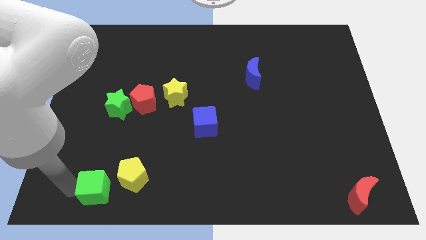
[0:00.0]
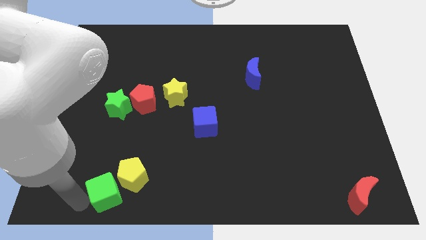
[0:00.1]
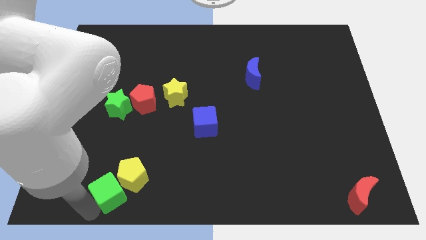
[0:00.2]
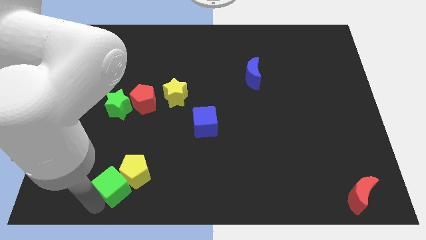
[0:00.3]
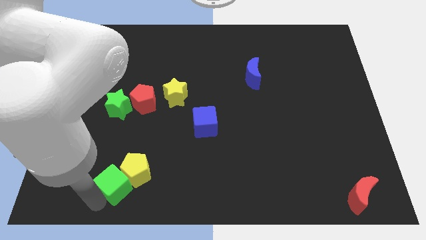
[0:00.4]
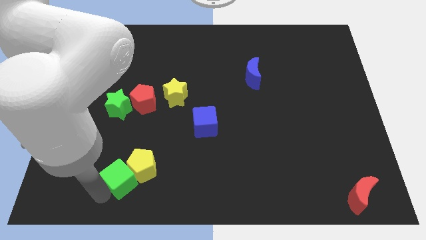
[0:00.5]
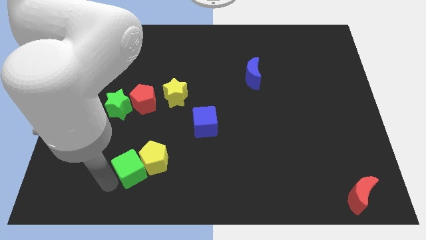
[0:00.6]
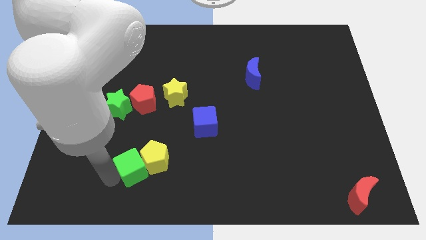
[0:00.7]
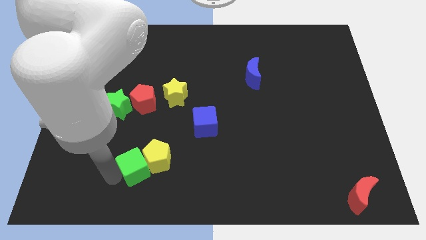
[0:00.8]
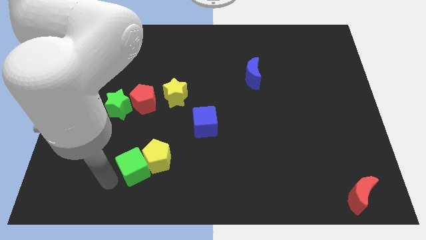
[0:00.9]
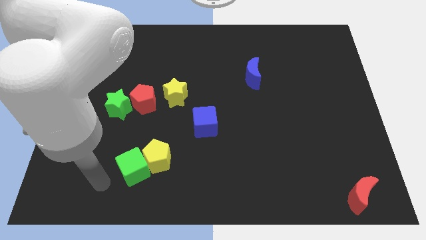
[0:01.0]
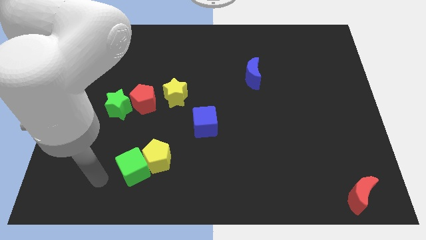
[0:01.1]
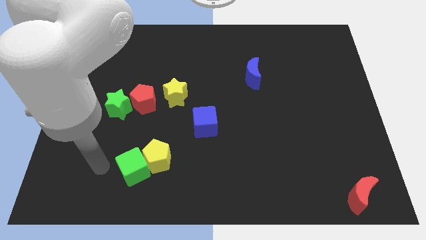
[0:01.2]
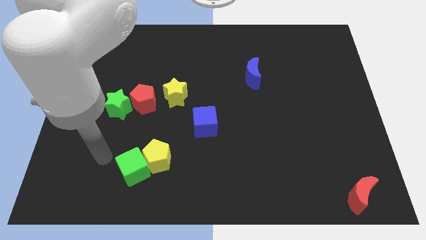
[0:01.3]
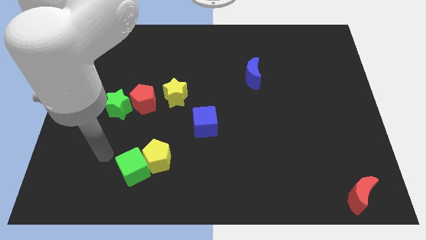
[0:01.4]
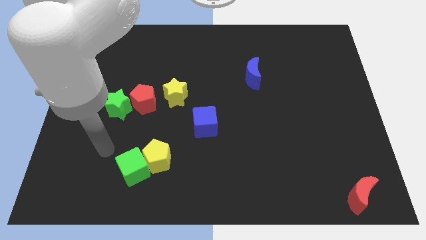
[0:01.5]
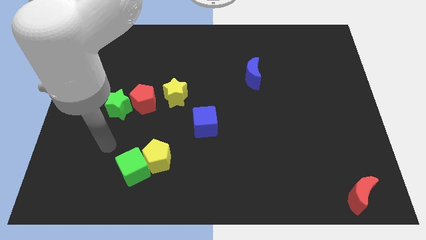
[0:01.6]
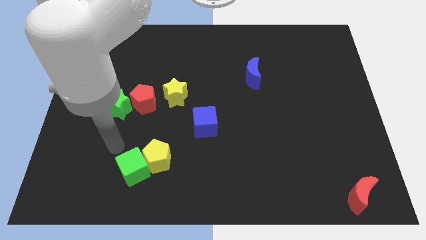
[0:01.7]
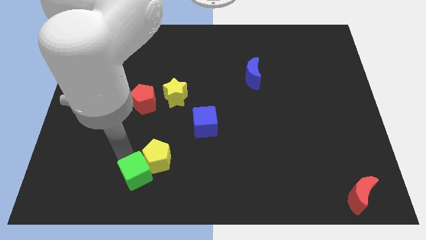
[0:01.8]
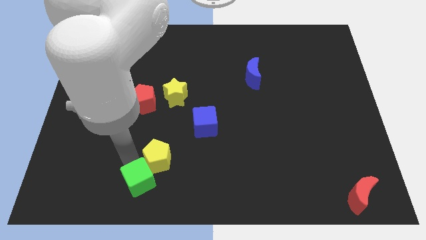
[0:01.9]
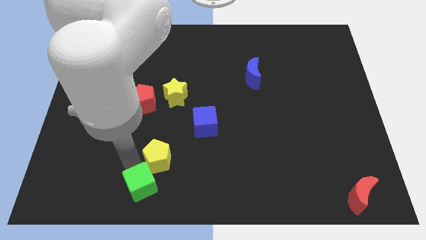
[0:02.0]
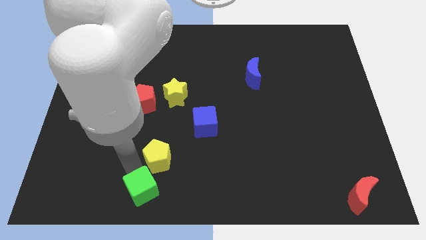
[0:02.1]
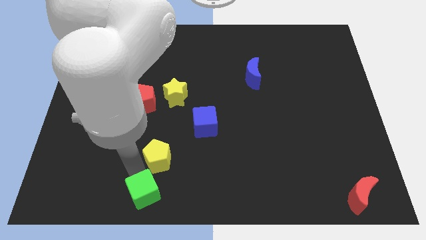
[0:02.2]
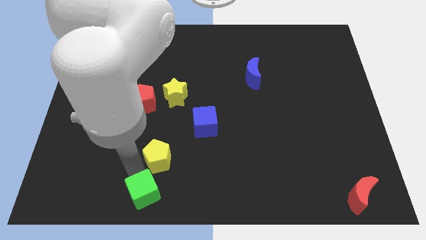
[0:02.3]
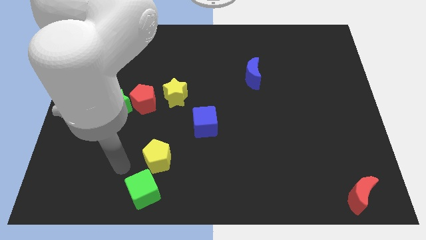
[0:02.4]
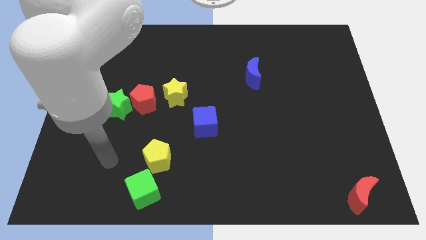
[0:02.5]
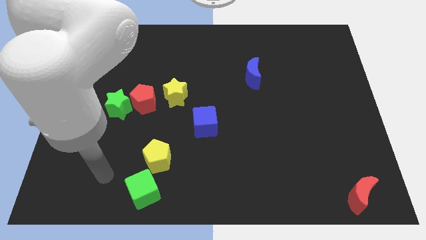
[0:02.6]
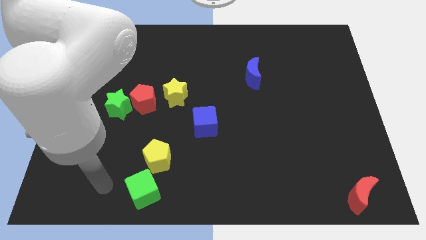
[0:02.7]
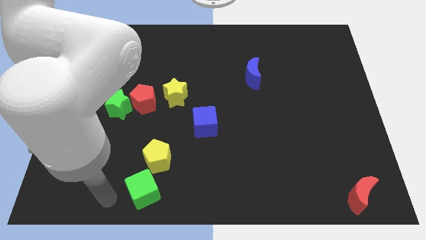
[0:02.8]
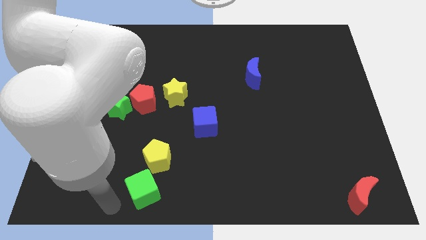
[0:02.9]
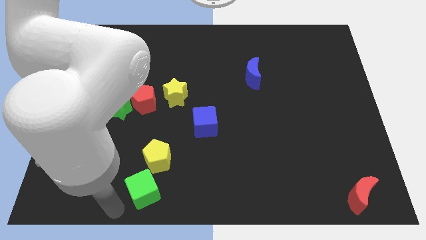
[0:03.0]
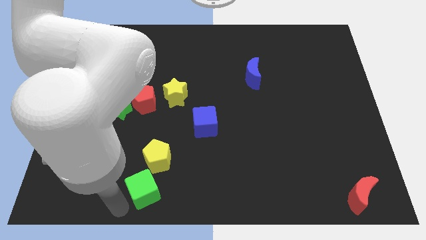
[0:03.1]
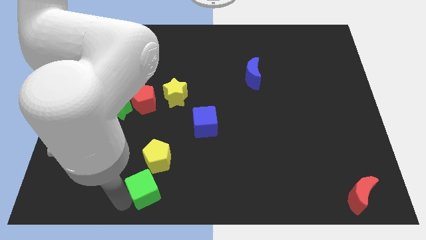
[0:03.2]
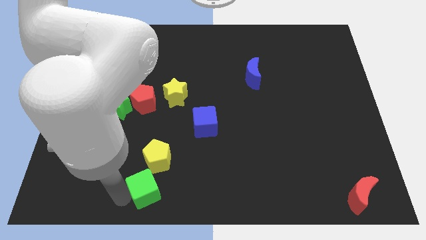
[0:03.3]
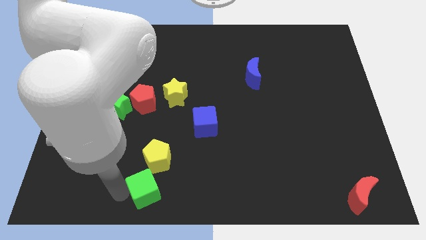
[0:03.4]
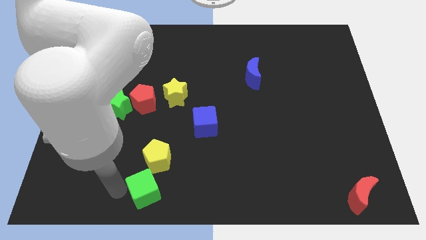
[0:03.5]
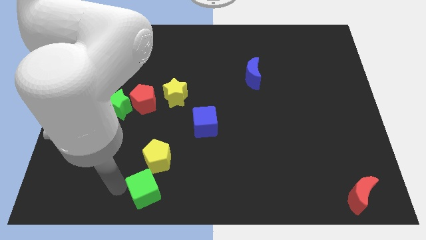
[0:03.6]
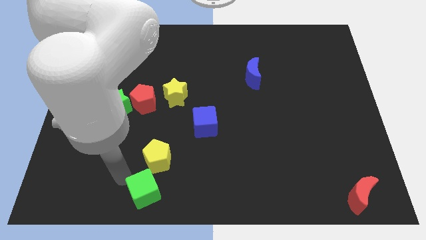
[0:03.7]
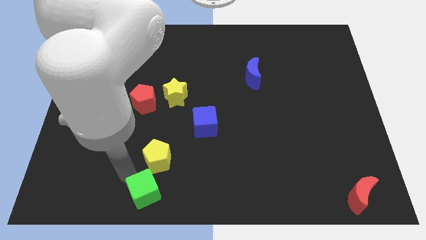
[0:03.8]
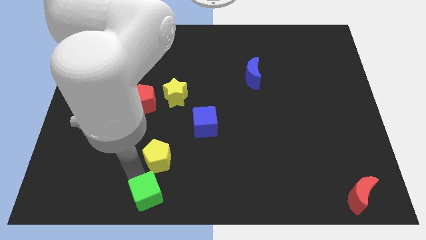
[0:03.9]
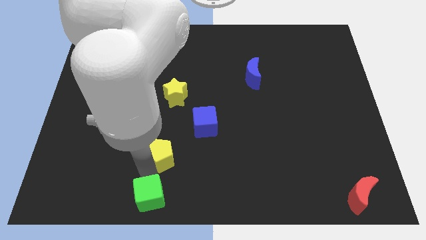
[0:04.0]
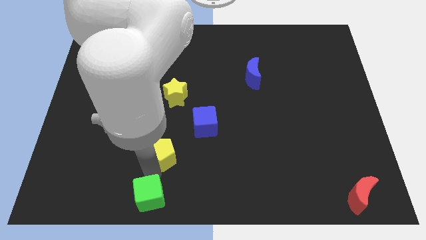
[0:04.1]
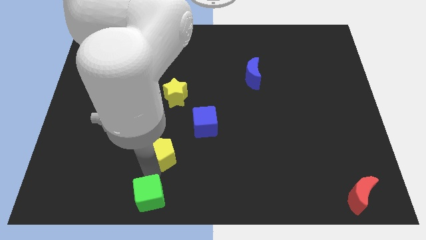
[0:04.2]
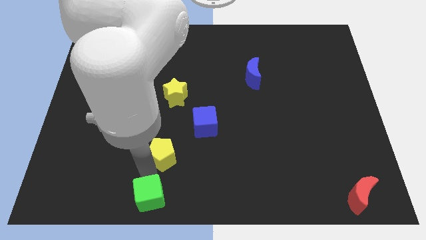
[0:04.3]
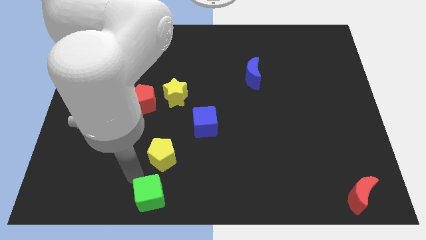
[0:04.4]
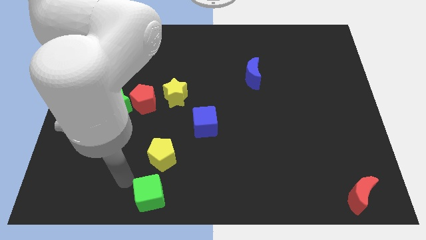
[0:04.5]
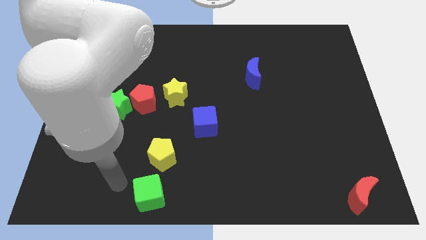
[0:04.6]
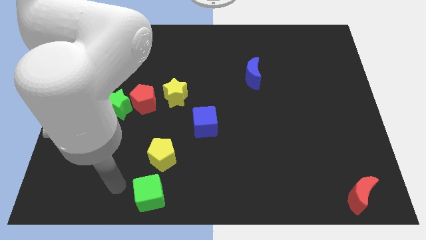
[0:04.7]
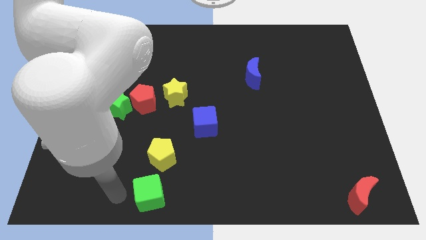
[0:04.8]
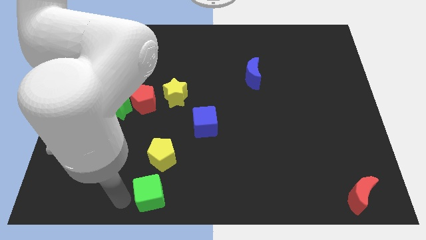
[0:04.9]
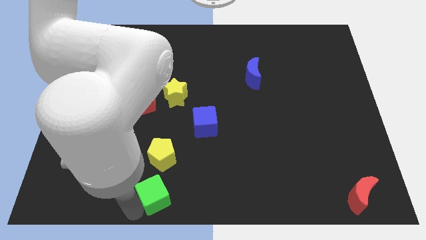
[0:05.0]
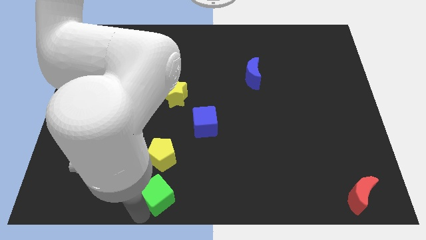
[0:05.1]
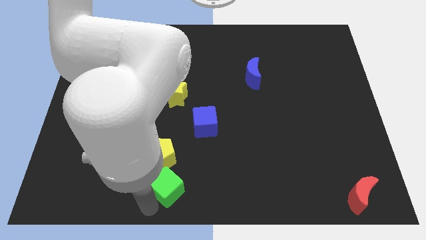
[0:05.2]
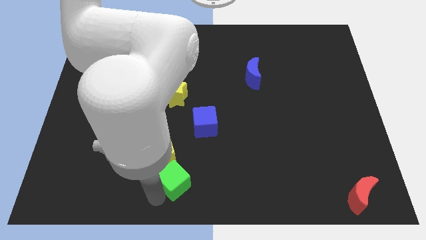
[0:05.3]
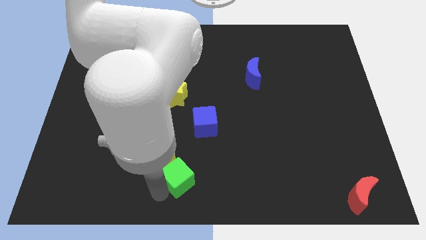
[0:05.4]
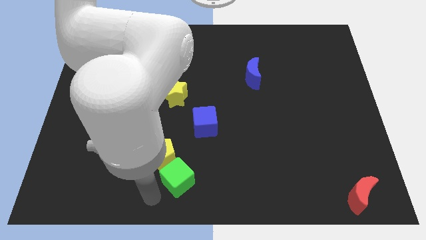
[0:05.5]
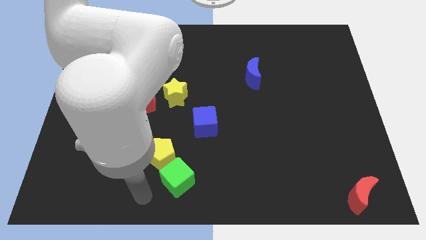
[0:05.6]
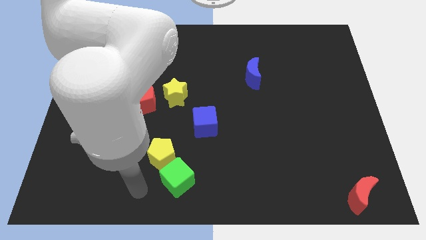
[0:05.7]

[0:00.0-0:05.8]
move yellow pentagon diagonal to the green cube

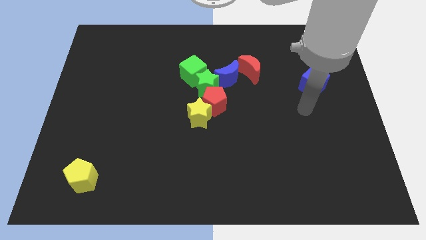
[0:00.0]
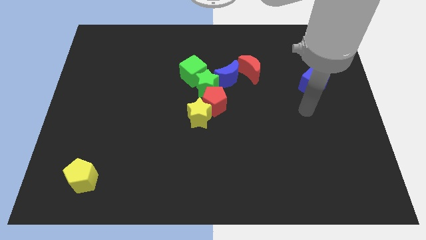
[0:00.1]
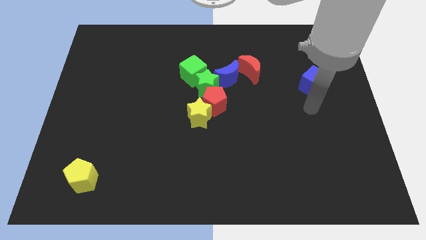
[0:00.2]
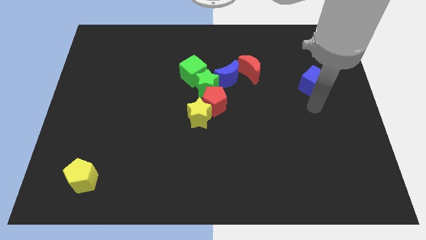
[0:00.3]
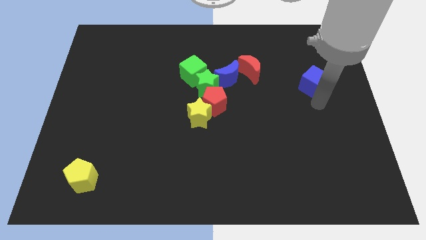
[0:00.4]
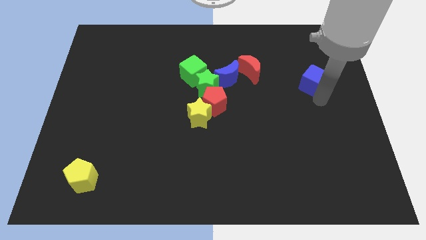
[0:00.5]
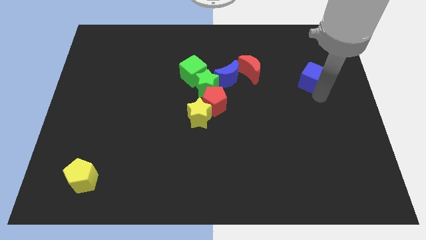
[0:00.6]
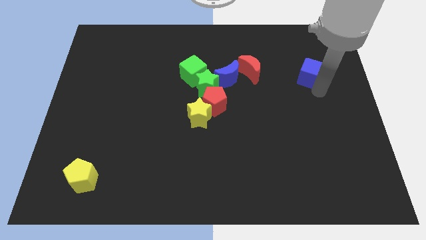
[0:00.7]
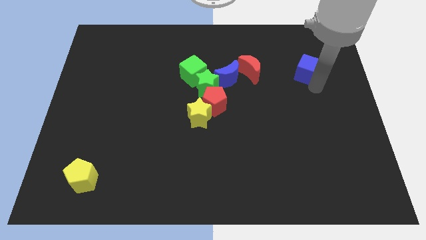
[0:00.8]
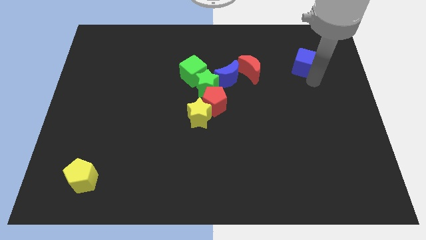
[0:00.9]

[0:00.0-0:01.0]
put the blue cube parallel to red moon

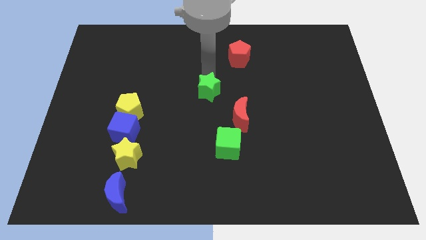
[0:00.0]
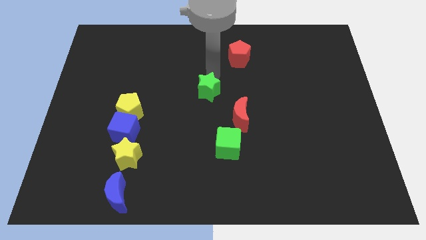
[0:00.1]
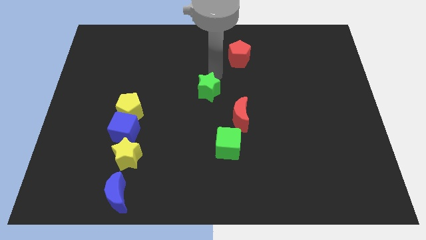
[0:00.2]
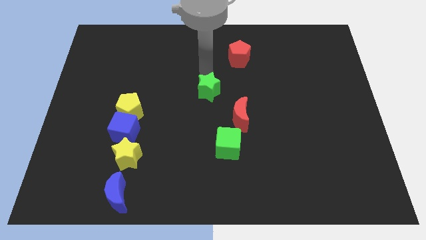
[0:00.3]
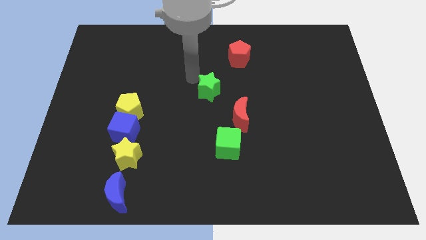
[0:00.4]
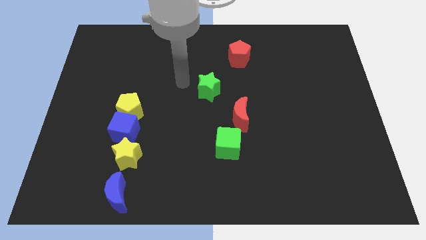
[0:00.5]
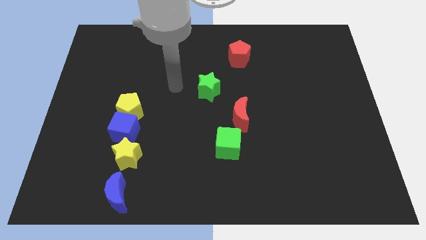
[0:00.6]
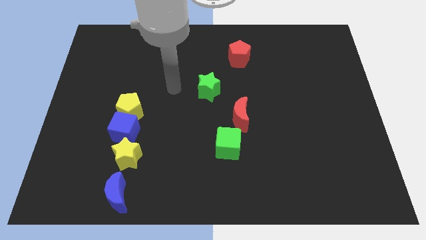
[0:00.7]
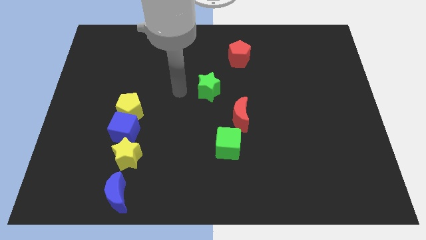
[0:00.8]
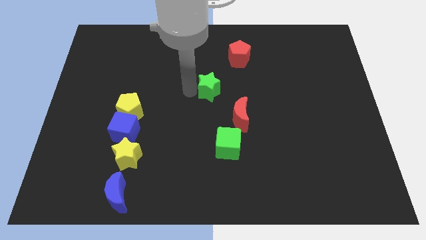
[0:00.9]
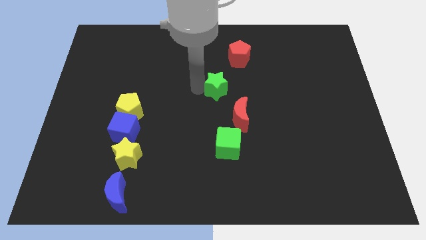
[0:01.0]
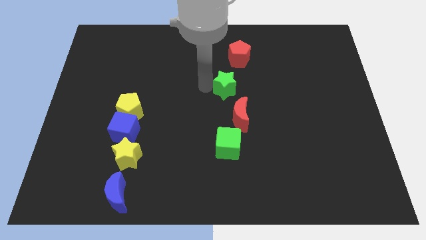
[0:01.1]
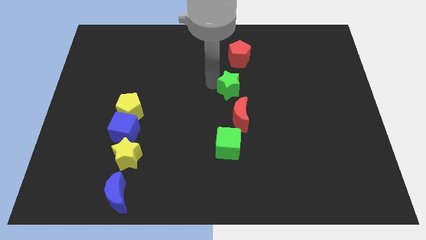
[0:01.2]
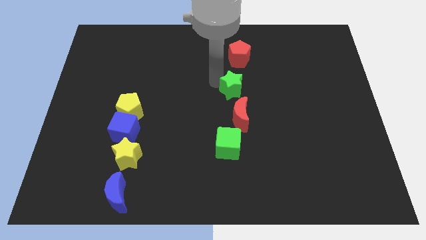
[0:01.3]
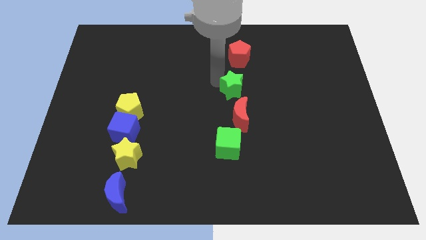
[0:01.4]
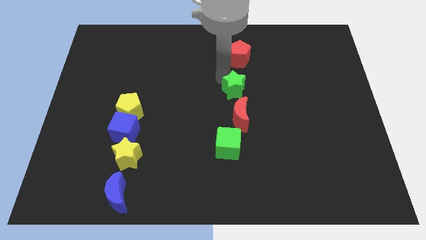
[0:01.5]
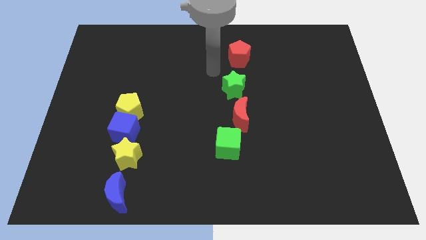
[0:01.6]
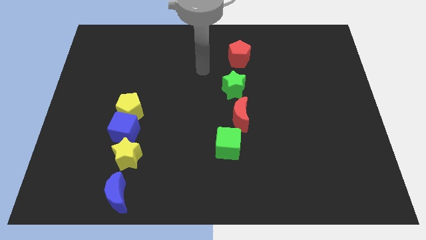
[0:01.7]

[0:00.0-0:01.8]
place the green star below the red pentagon

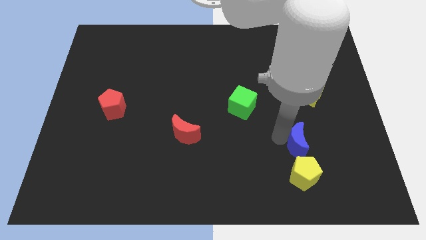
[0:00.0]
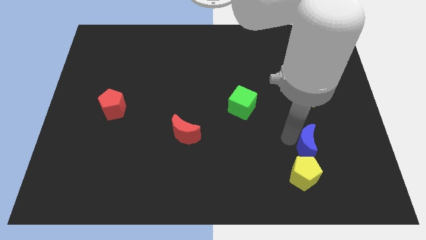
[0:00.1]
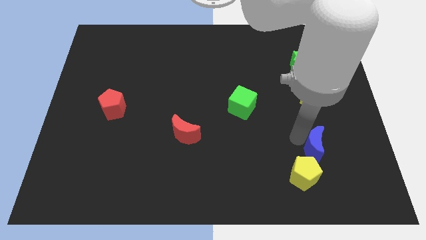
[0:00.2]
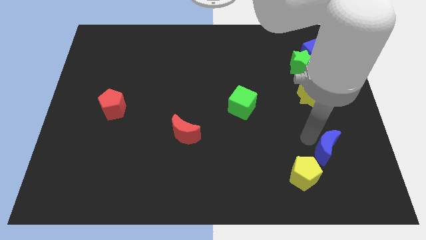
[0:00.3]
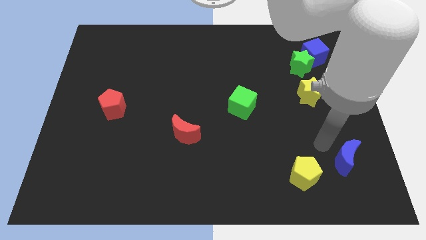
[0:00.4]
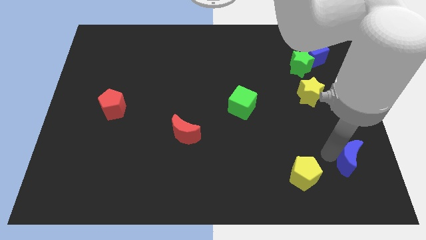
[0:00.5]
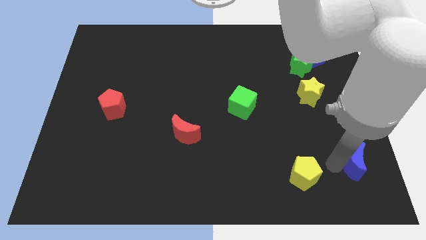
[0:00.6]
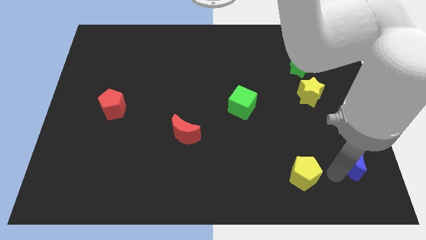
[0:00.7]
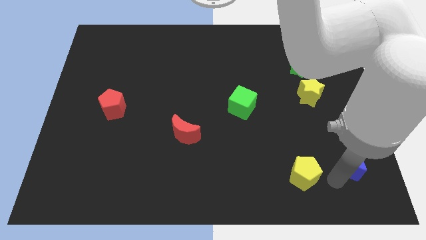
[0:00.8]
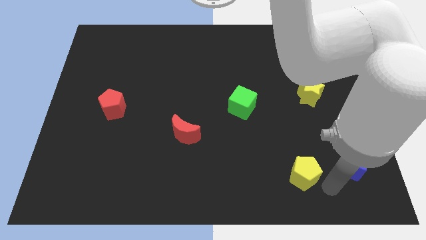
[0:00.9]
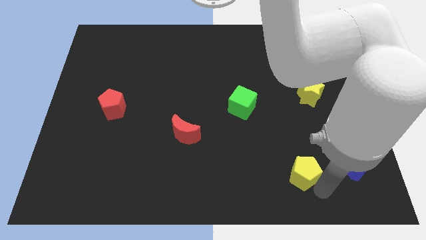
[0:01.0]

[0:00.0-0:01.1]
push the blue moon to the right of the yellow pentagon
